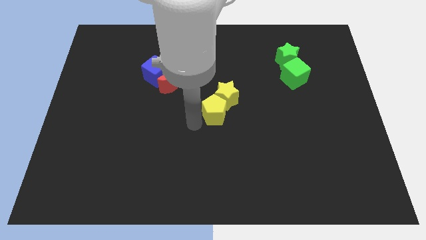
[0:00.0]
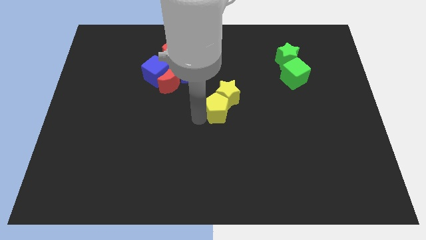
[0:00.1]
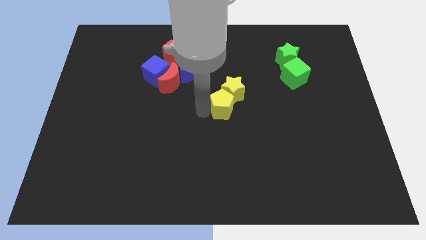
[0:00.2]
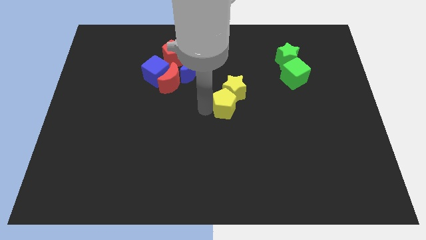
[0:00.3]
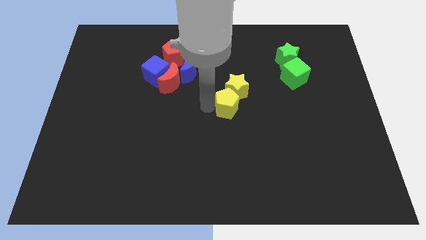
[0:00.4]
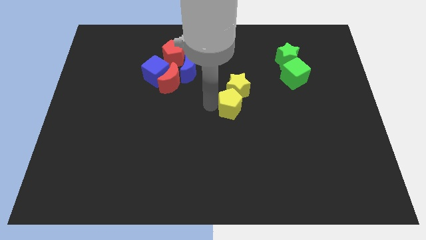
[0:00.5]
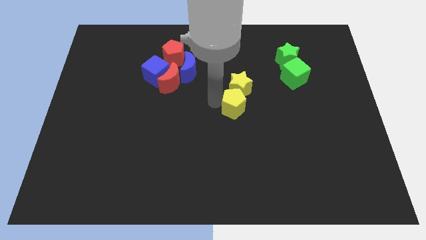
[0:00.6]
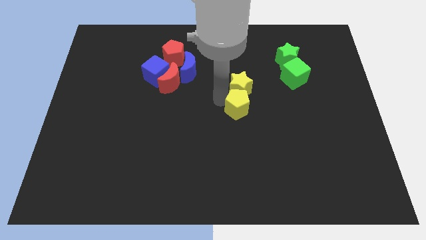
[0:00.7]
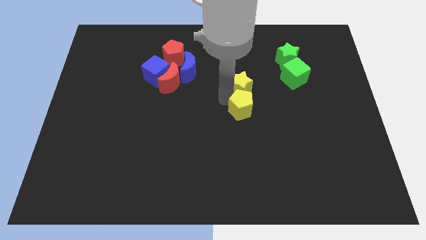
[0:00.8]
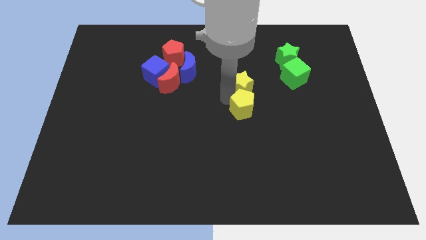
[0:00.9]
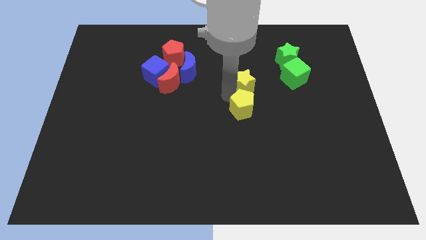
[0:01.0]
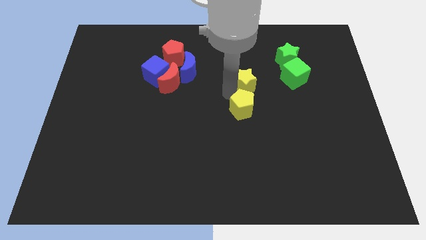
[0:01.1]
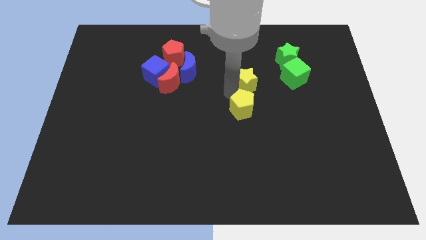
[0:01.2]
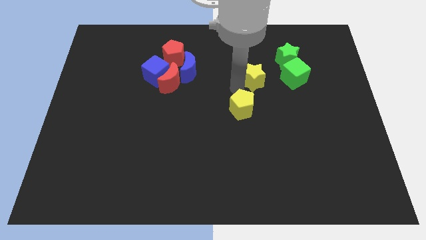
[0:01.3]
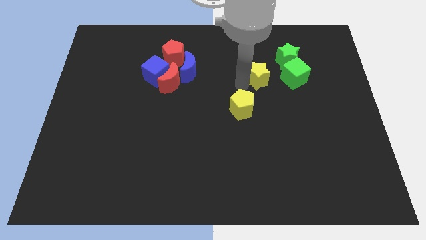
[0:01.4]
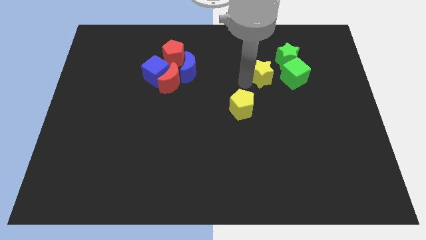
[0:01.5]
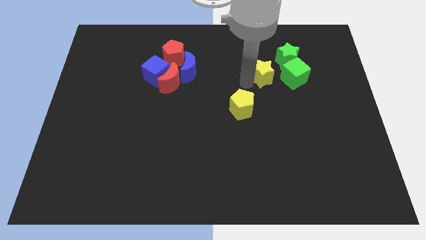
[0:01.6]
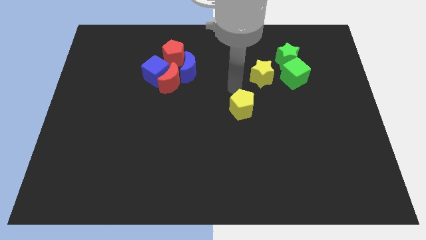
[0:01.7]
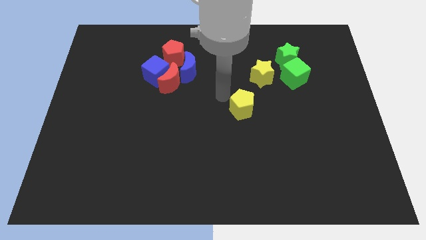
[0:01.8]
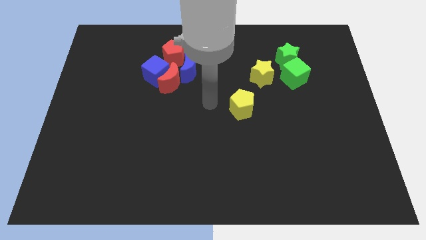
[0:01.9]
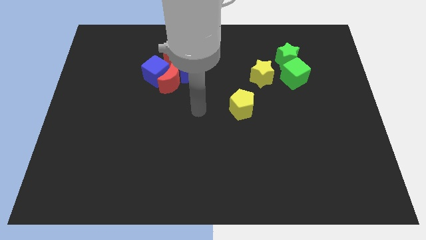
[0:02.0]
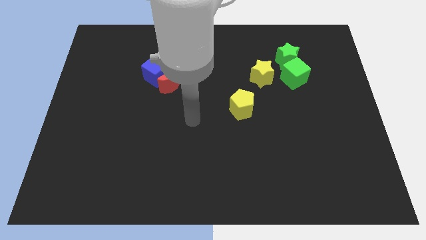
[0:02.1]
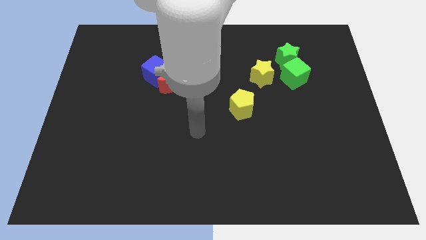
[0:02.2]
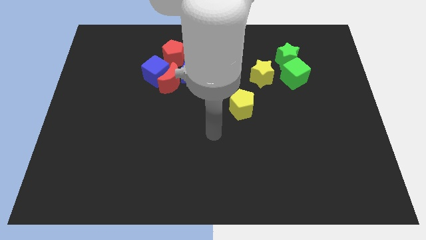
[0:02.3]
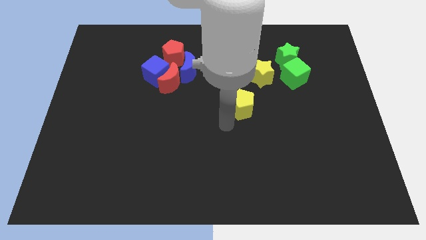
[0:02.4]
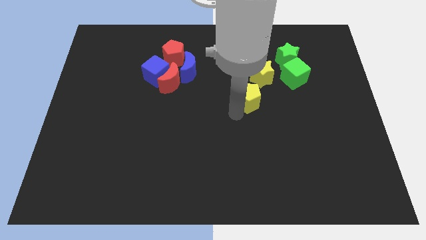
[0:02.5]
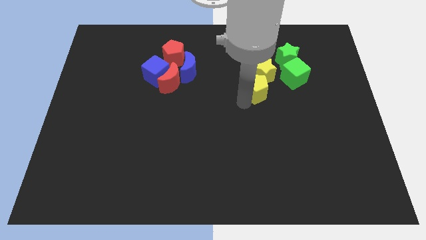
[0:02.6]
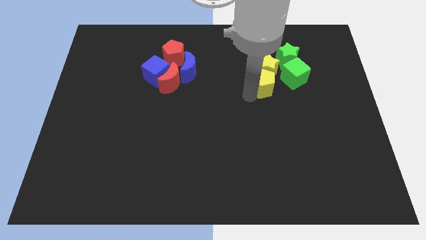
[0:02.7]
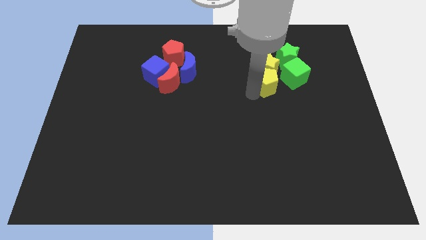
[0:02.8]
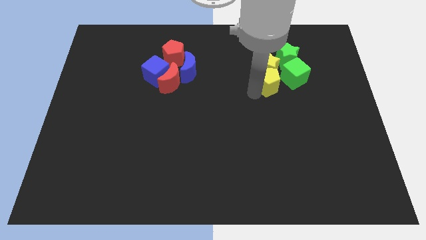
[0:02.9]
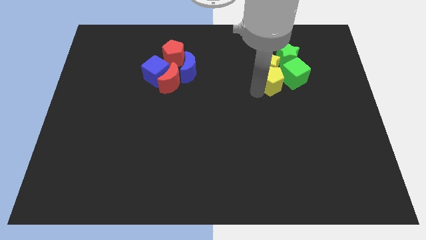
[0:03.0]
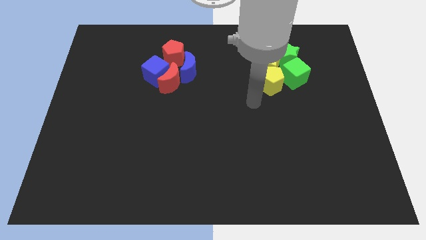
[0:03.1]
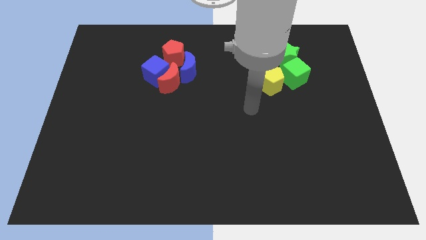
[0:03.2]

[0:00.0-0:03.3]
make a group of yellow and green blocks

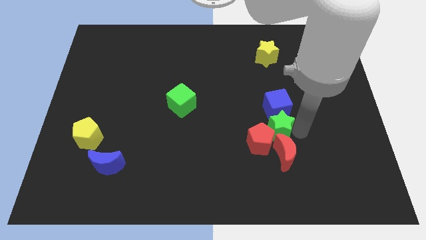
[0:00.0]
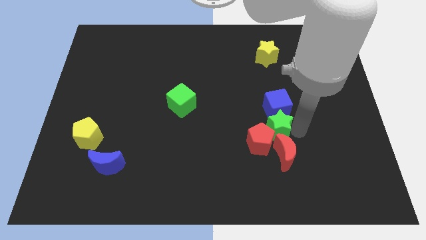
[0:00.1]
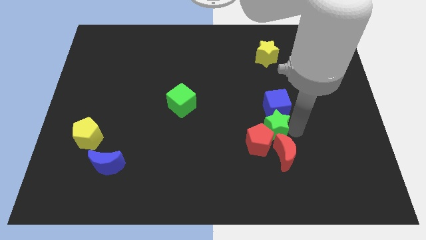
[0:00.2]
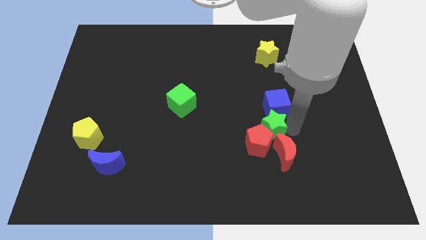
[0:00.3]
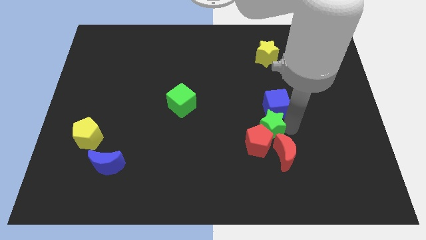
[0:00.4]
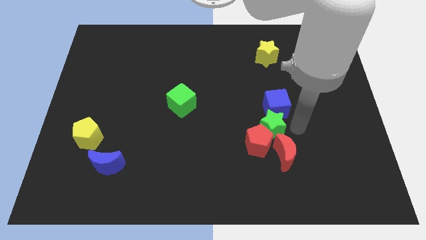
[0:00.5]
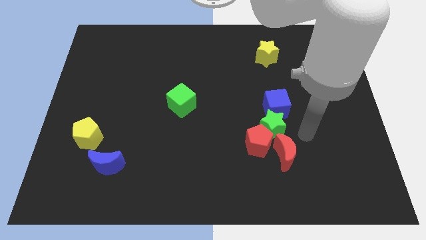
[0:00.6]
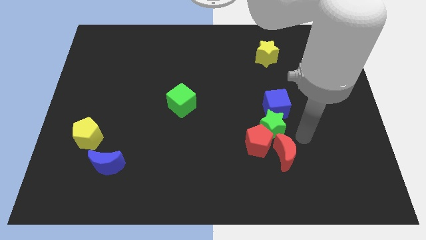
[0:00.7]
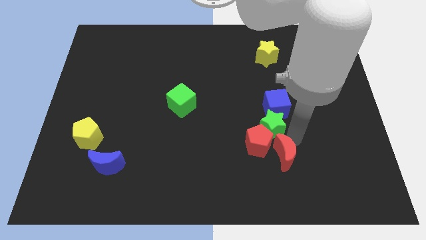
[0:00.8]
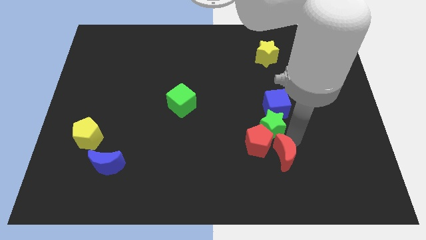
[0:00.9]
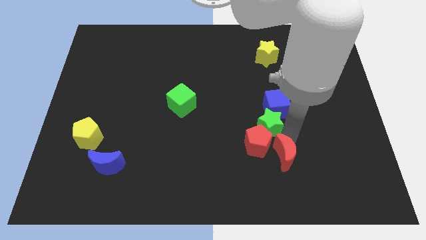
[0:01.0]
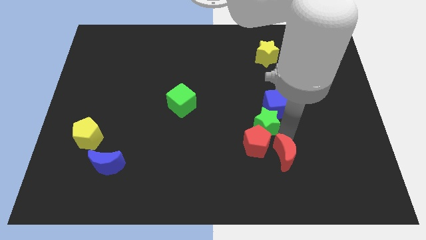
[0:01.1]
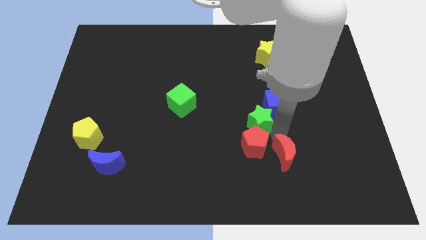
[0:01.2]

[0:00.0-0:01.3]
push the green star in between the blue cube and red pentagon

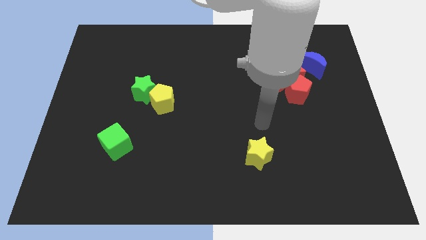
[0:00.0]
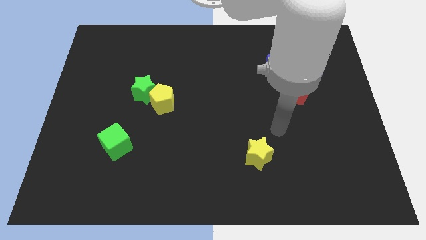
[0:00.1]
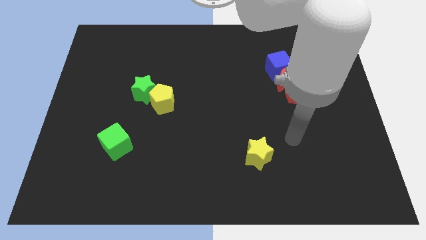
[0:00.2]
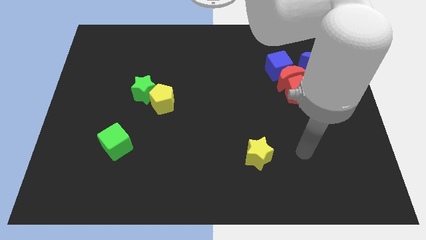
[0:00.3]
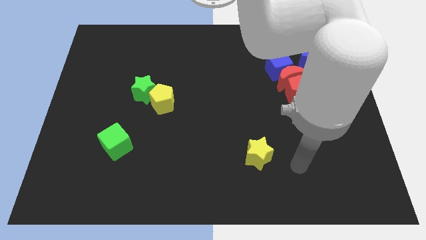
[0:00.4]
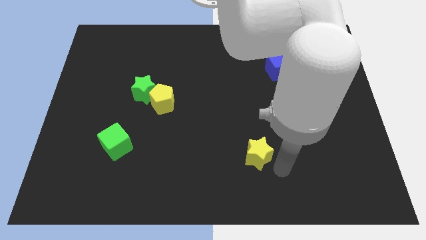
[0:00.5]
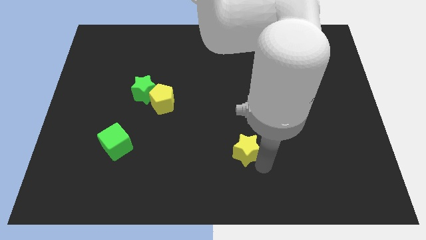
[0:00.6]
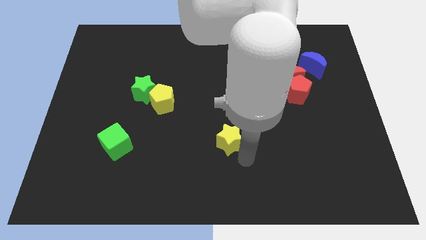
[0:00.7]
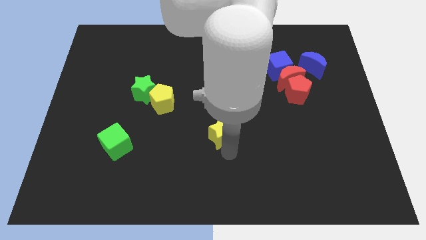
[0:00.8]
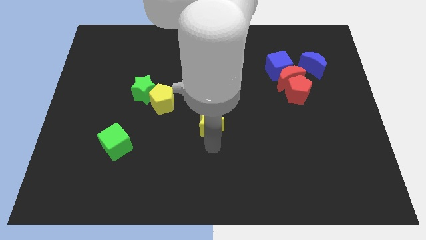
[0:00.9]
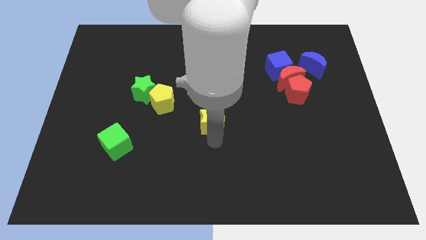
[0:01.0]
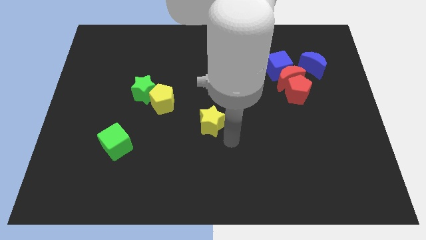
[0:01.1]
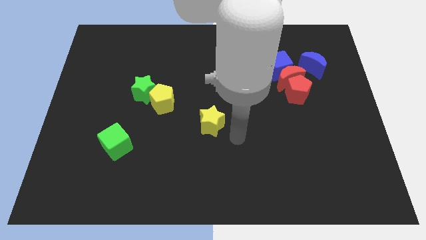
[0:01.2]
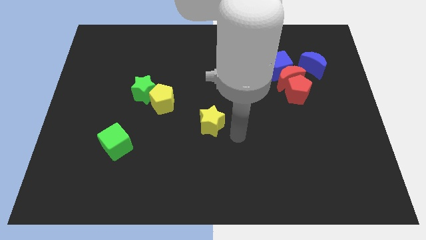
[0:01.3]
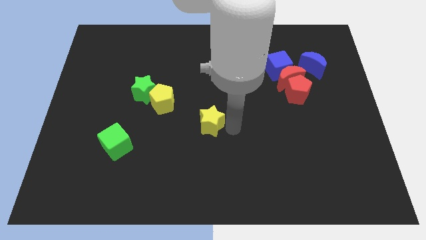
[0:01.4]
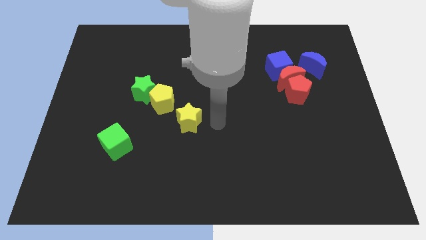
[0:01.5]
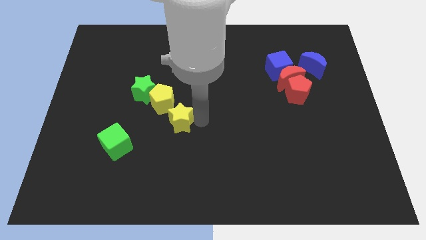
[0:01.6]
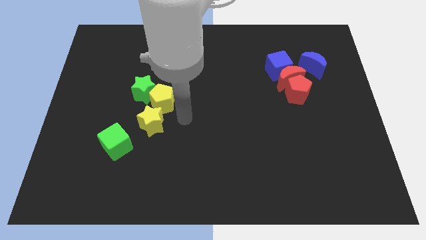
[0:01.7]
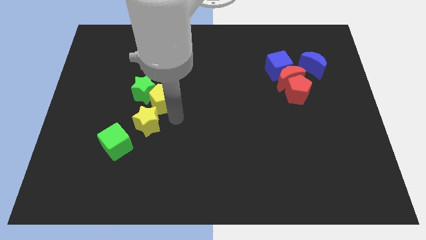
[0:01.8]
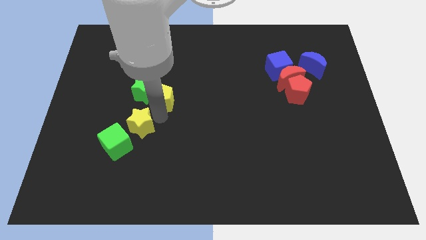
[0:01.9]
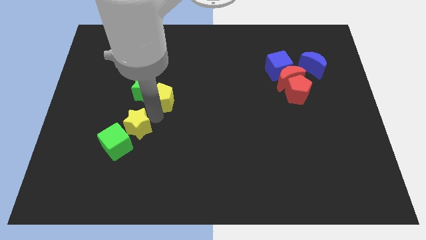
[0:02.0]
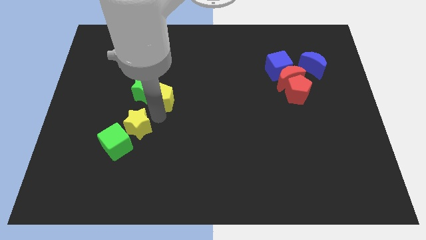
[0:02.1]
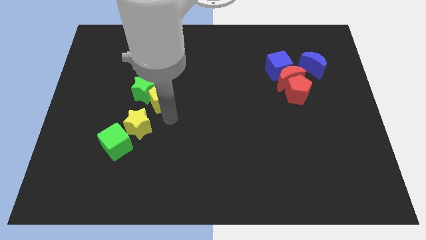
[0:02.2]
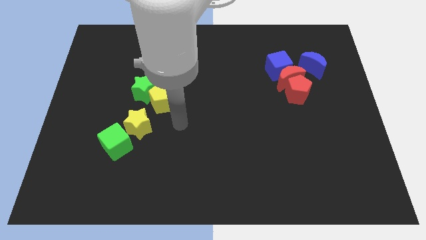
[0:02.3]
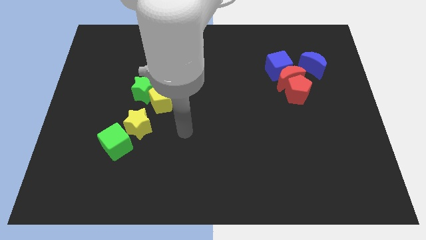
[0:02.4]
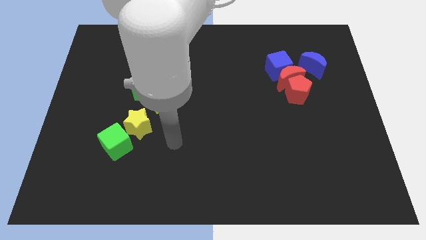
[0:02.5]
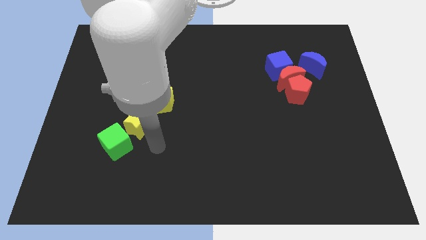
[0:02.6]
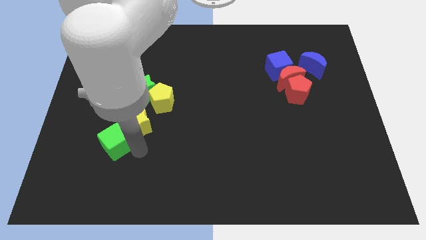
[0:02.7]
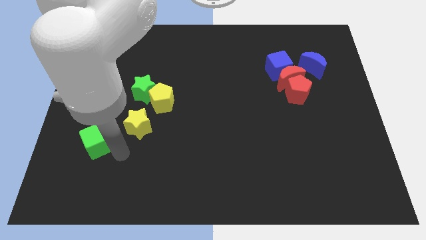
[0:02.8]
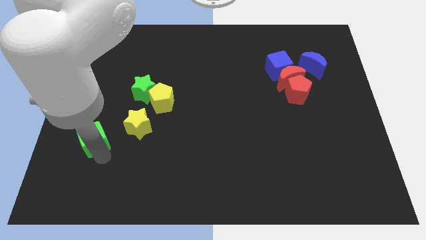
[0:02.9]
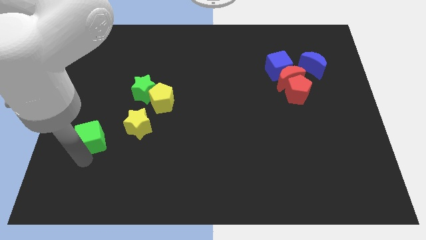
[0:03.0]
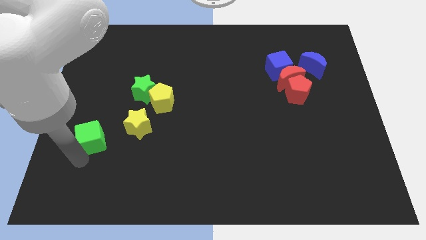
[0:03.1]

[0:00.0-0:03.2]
place the yellow star to the right of the green cube

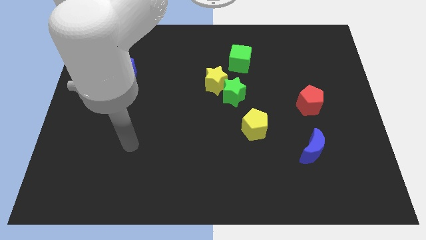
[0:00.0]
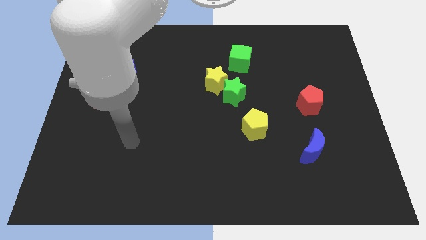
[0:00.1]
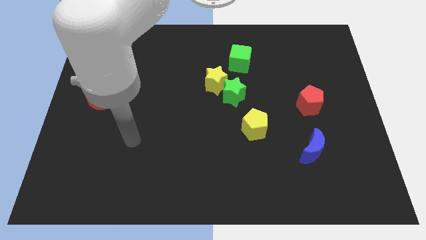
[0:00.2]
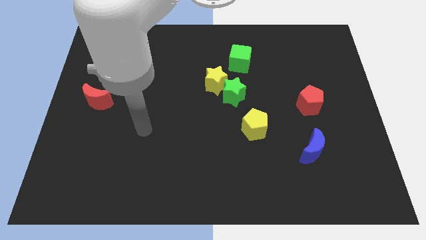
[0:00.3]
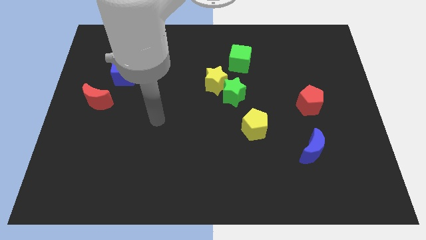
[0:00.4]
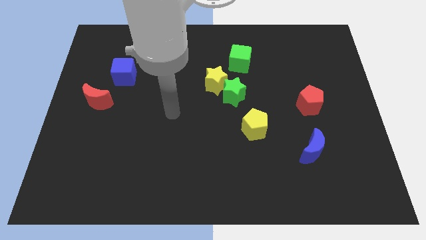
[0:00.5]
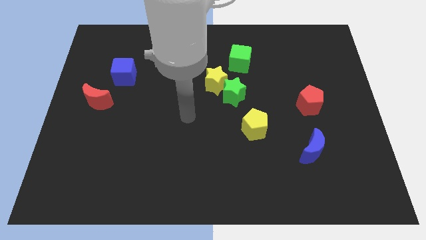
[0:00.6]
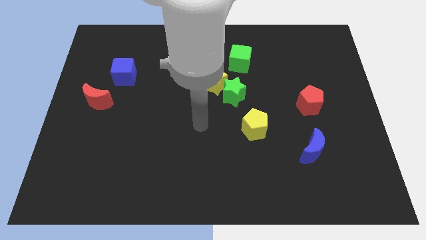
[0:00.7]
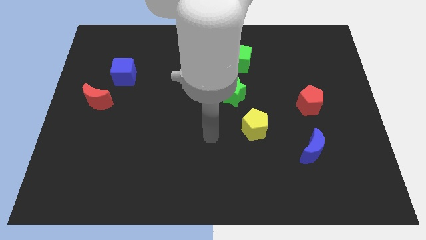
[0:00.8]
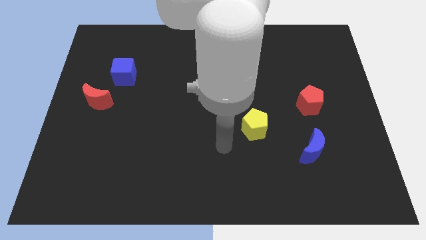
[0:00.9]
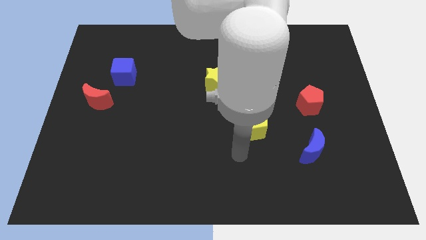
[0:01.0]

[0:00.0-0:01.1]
move the arm towards the yellow pentagon
